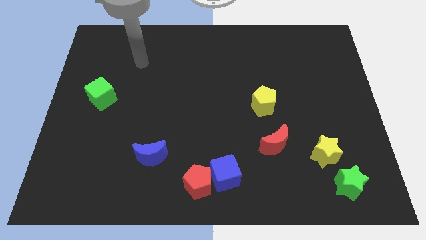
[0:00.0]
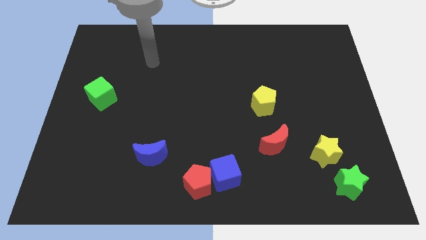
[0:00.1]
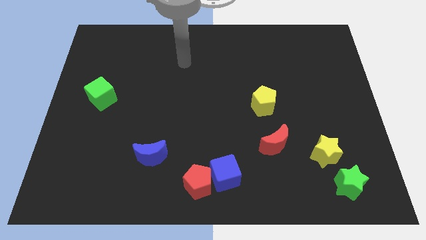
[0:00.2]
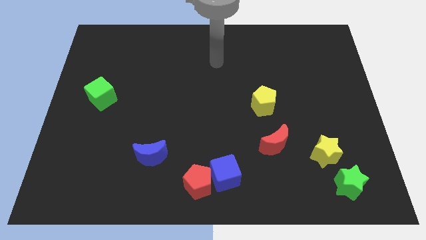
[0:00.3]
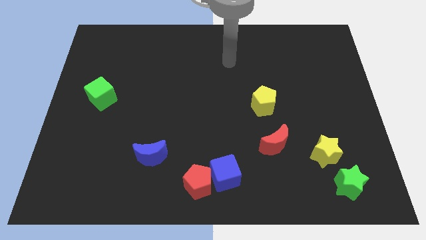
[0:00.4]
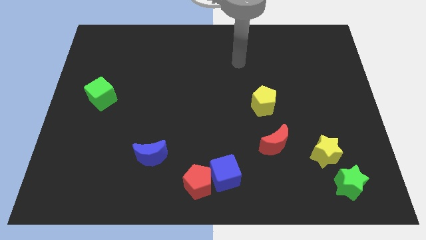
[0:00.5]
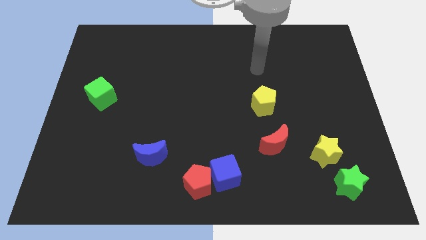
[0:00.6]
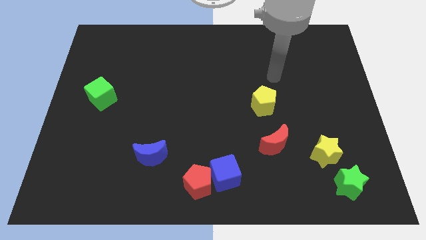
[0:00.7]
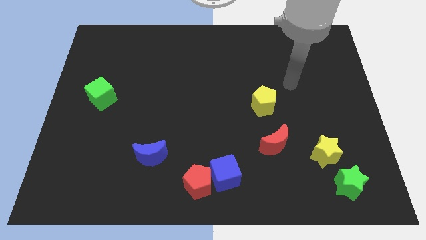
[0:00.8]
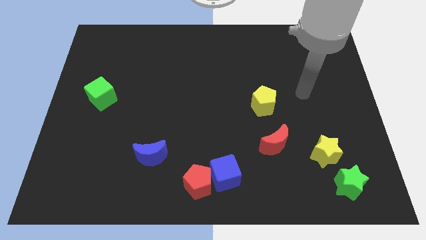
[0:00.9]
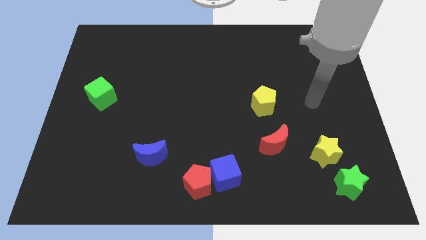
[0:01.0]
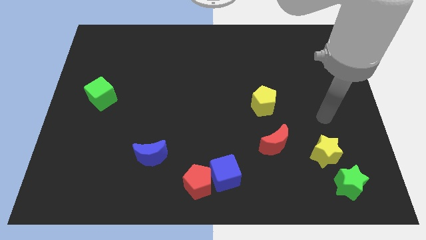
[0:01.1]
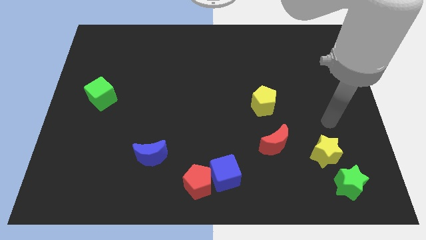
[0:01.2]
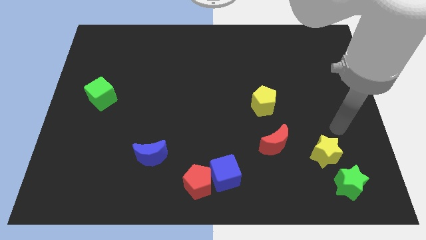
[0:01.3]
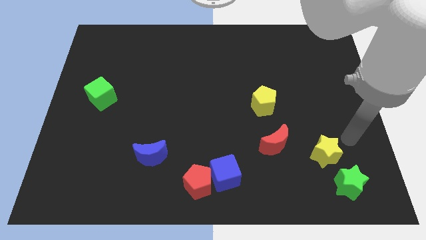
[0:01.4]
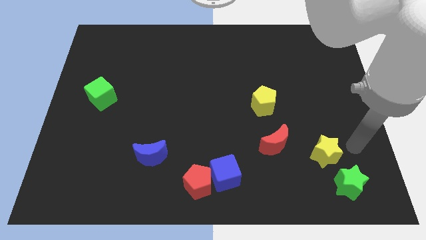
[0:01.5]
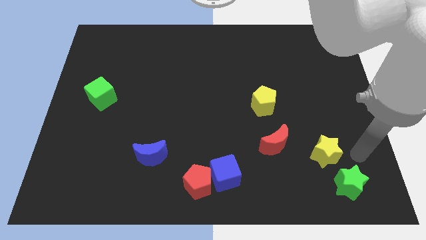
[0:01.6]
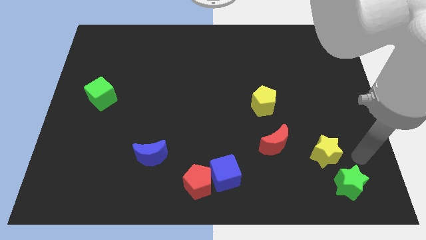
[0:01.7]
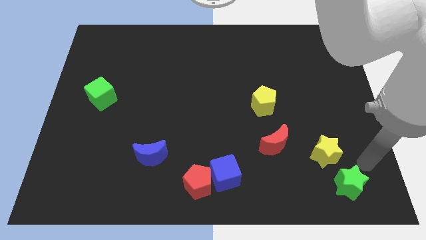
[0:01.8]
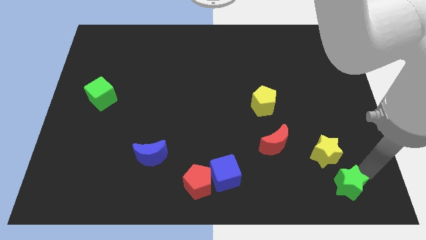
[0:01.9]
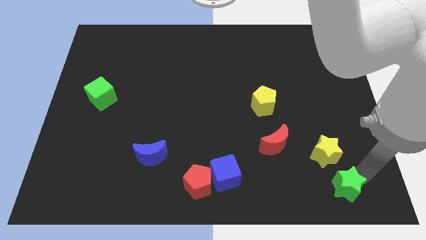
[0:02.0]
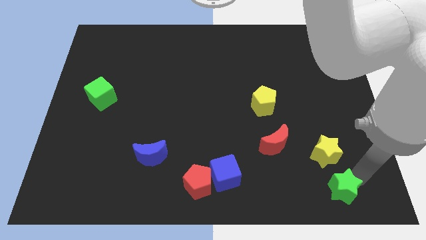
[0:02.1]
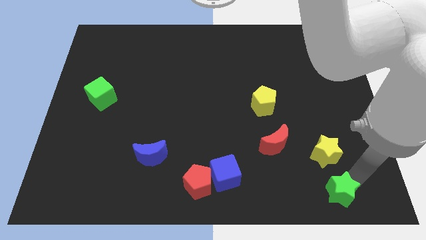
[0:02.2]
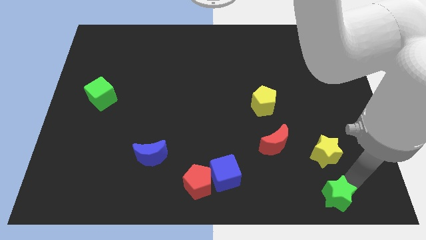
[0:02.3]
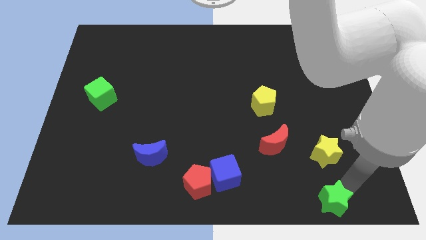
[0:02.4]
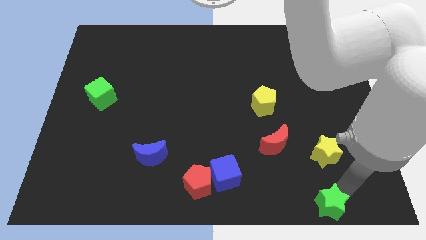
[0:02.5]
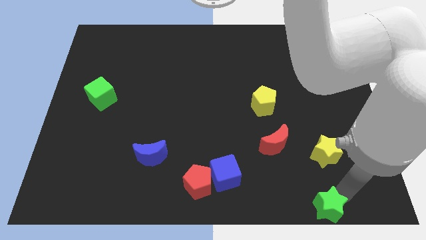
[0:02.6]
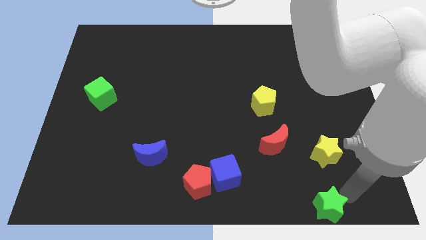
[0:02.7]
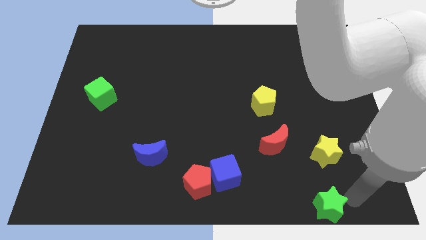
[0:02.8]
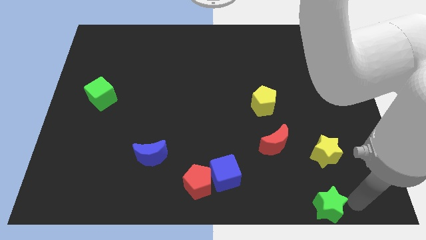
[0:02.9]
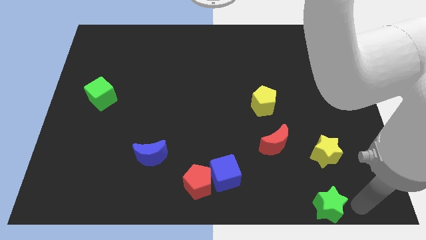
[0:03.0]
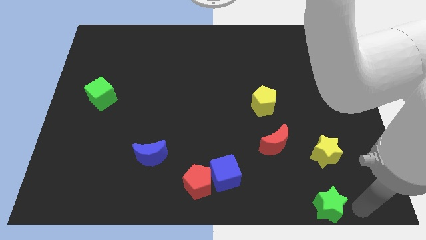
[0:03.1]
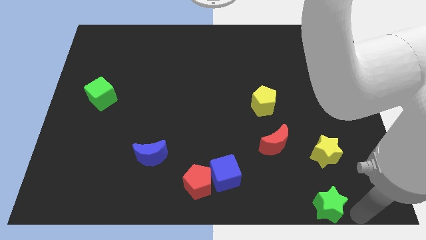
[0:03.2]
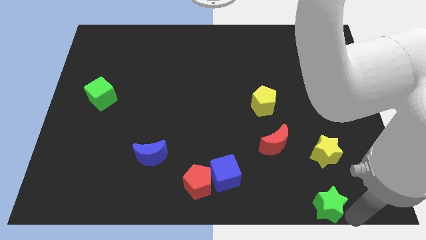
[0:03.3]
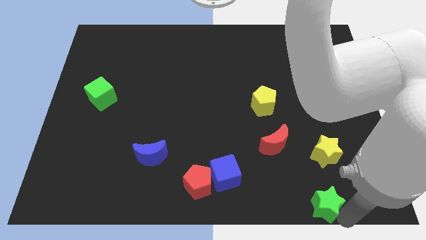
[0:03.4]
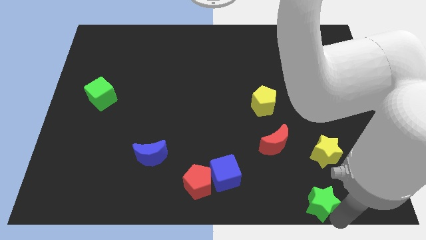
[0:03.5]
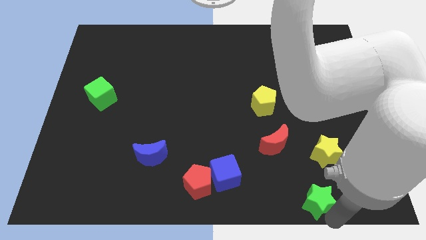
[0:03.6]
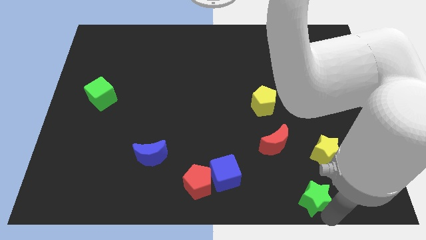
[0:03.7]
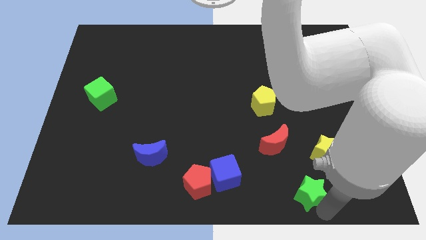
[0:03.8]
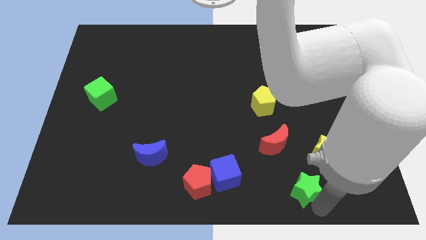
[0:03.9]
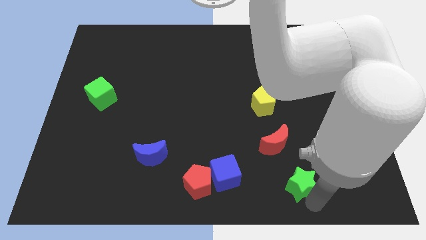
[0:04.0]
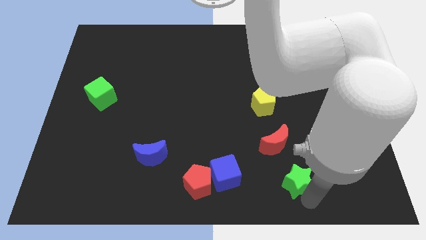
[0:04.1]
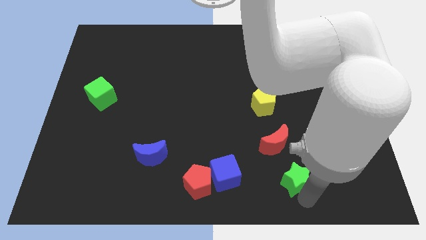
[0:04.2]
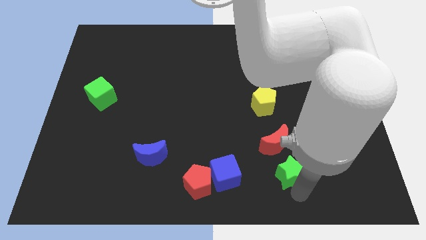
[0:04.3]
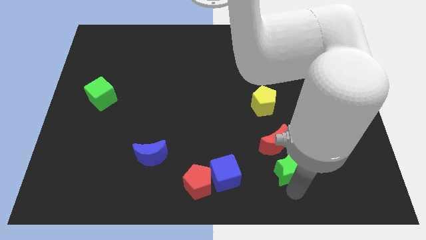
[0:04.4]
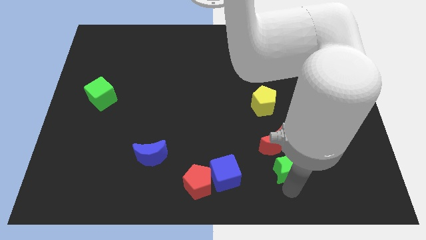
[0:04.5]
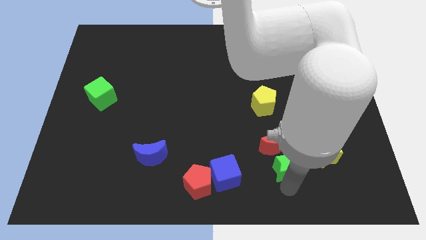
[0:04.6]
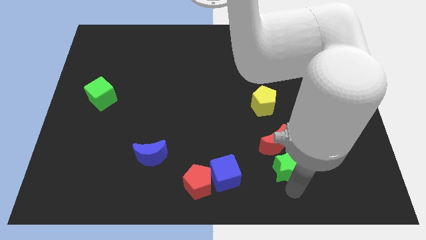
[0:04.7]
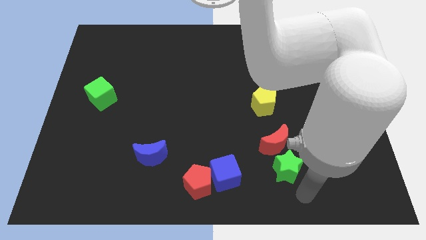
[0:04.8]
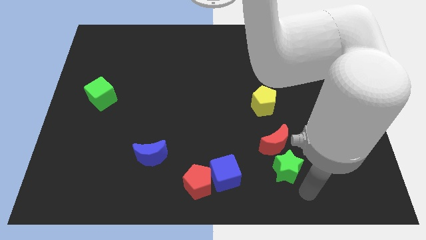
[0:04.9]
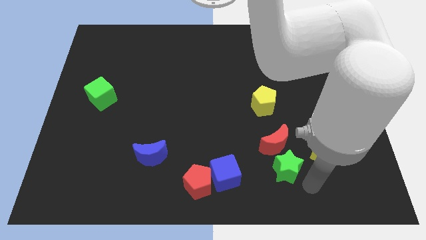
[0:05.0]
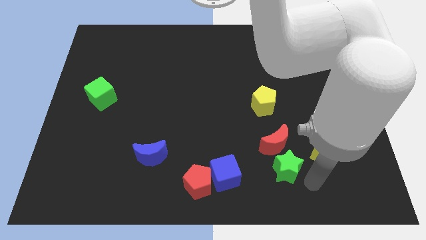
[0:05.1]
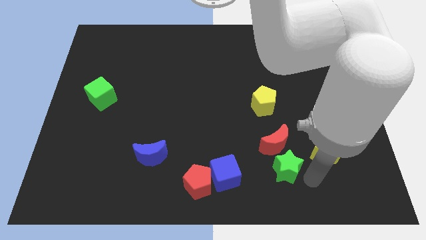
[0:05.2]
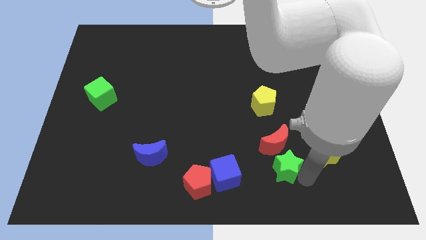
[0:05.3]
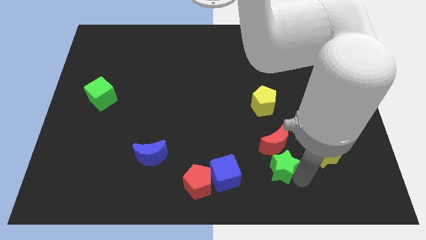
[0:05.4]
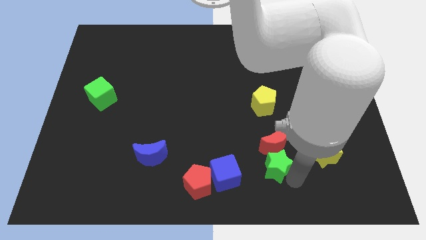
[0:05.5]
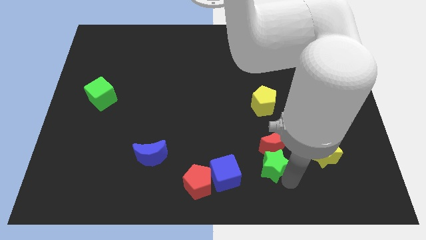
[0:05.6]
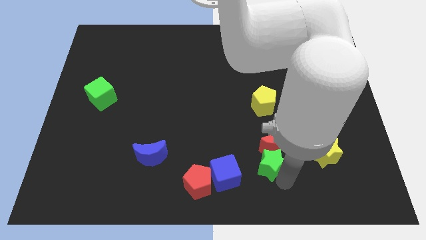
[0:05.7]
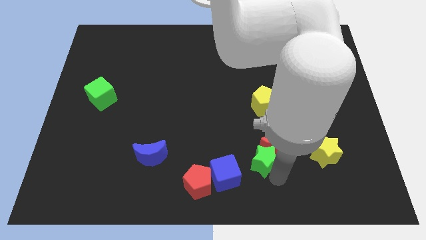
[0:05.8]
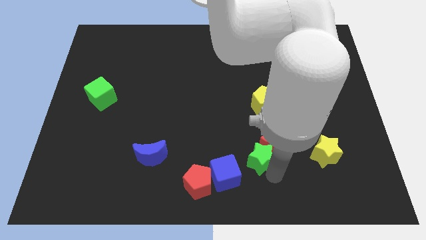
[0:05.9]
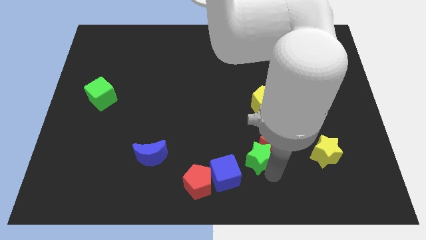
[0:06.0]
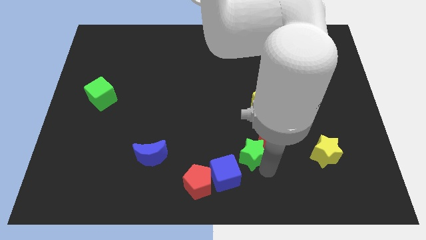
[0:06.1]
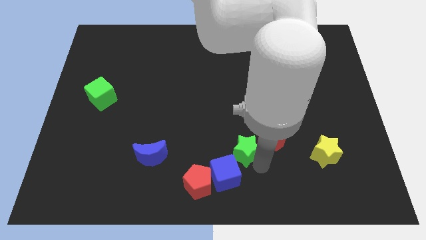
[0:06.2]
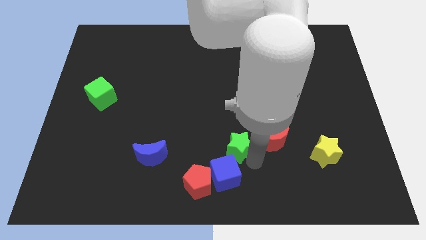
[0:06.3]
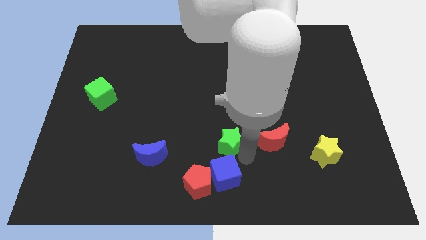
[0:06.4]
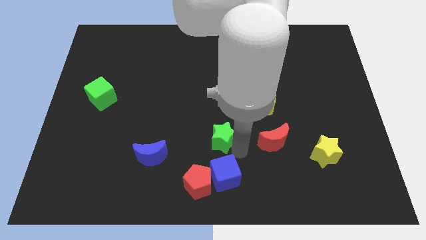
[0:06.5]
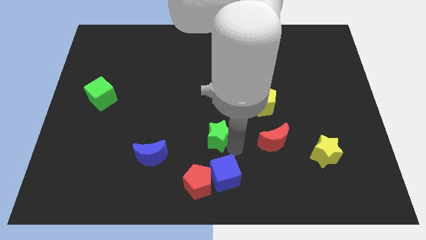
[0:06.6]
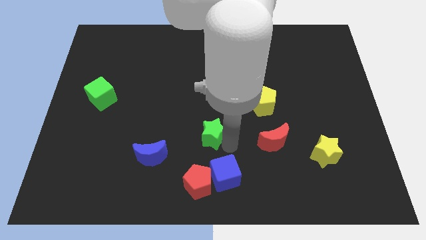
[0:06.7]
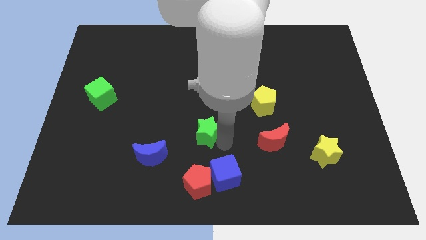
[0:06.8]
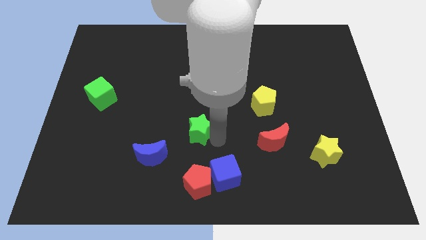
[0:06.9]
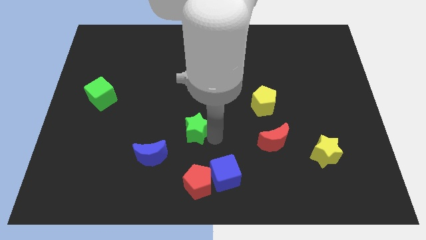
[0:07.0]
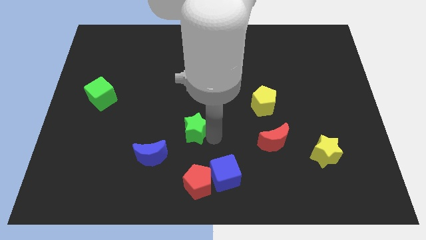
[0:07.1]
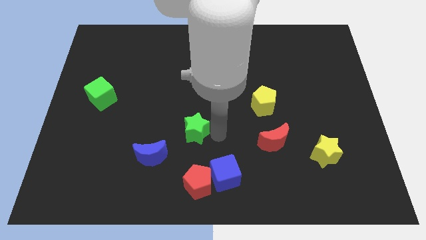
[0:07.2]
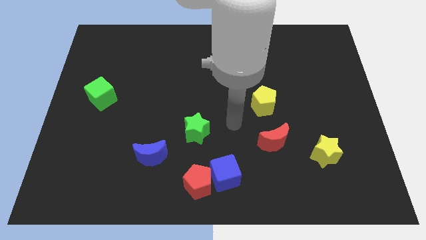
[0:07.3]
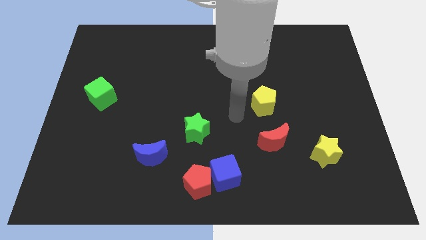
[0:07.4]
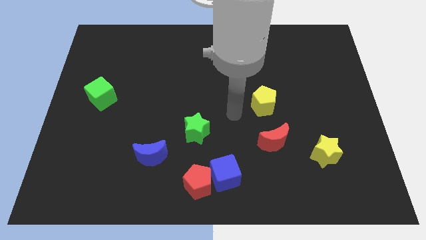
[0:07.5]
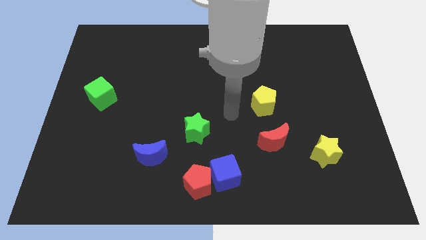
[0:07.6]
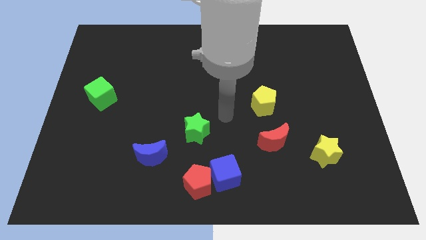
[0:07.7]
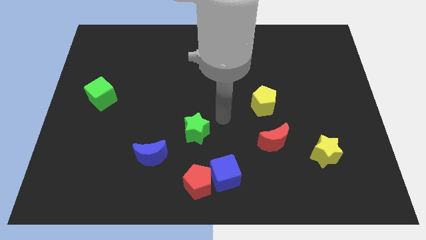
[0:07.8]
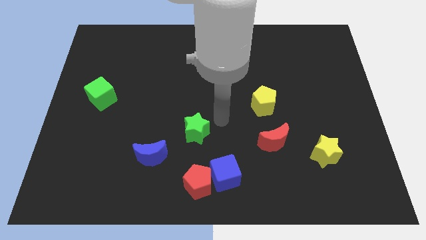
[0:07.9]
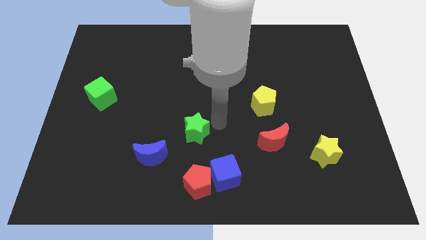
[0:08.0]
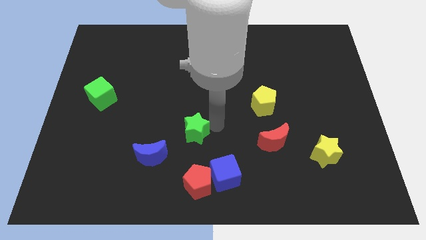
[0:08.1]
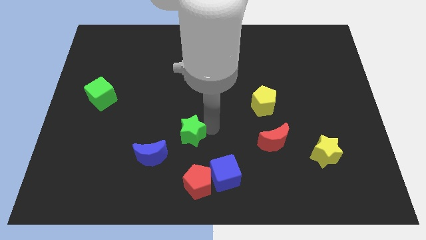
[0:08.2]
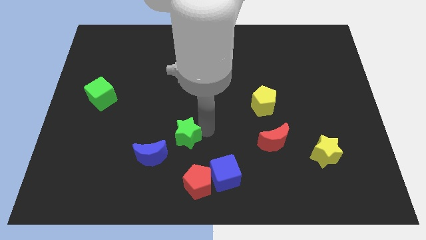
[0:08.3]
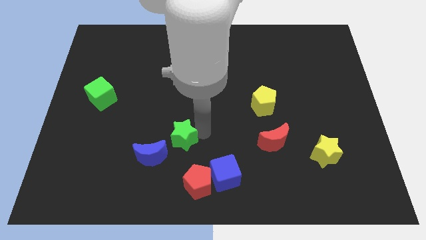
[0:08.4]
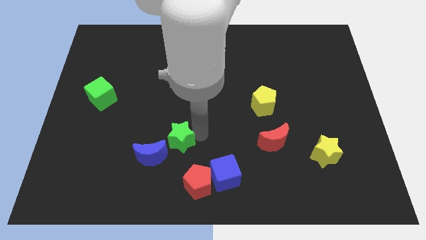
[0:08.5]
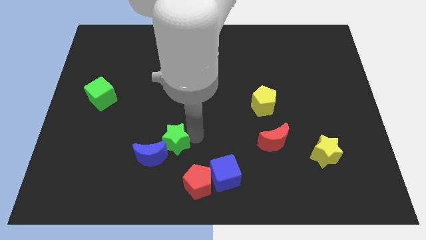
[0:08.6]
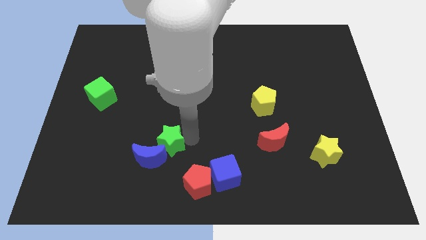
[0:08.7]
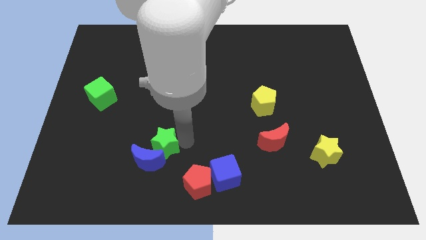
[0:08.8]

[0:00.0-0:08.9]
slide the green star next to the blue moon
